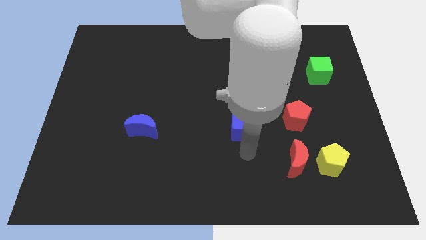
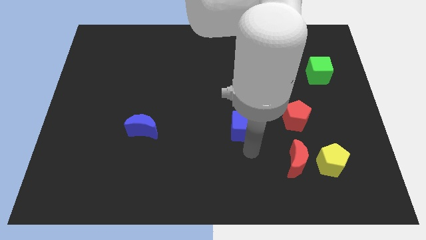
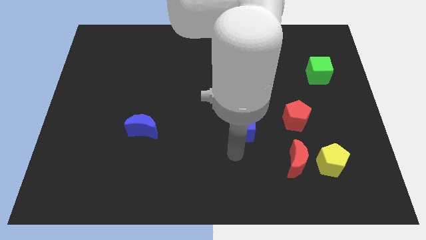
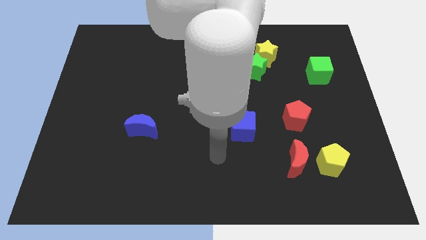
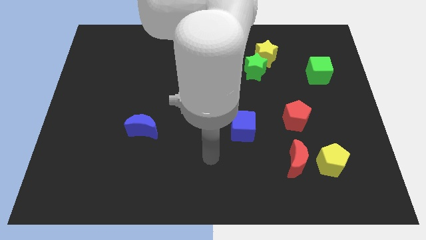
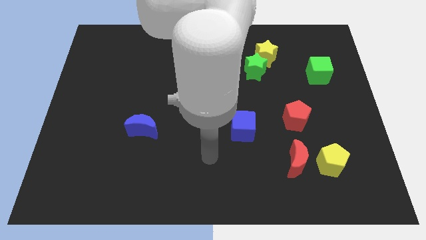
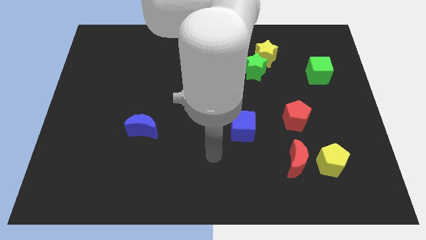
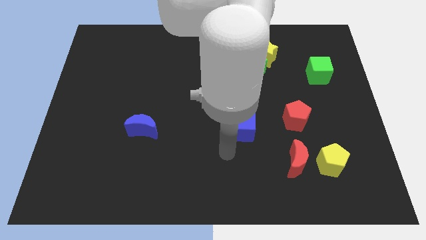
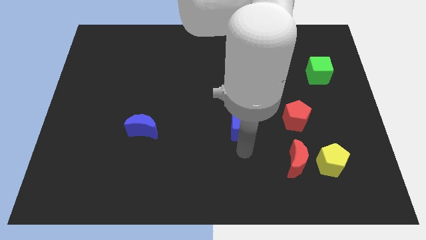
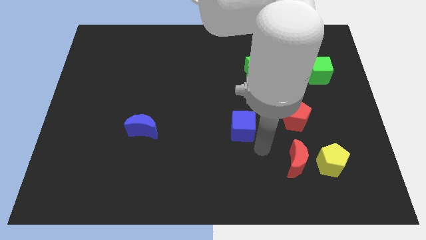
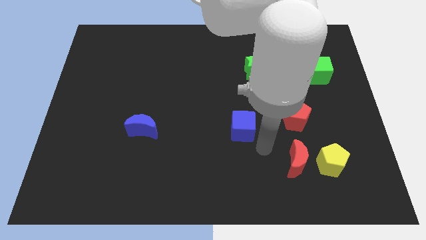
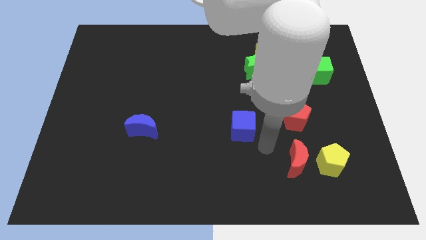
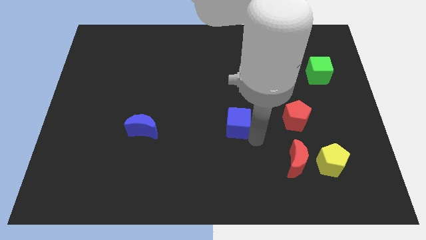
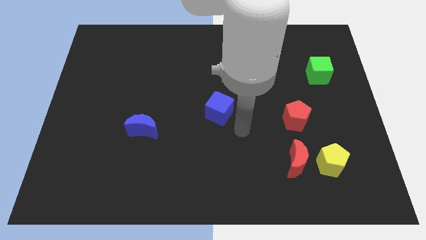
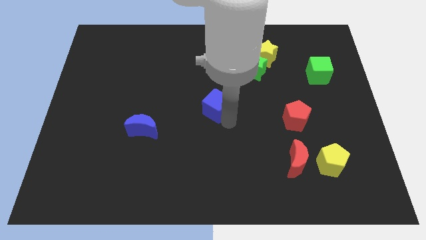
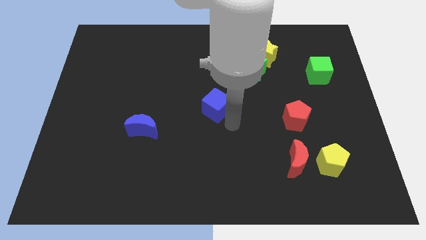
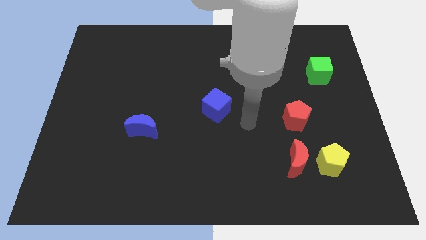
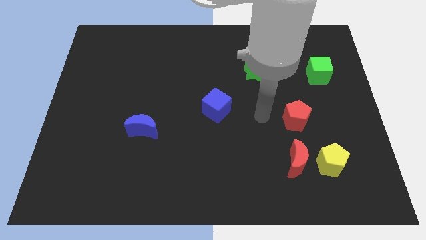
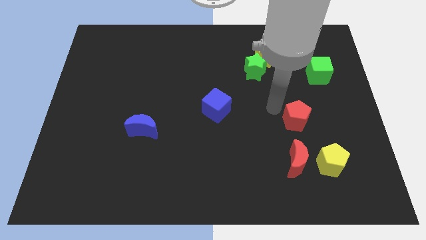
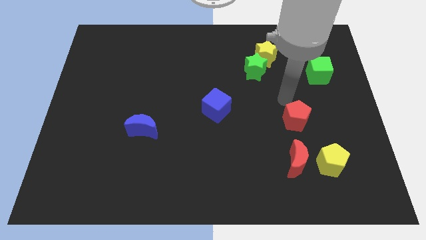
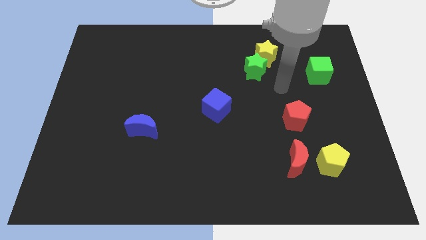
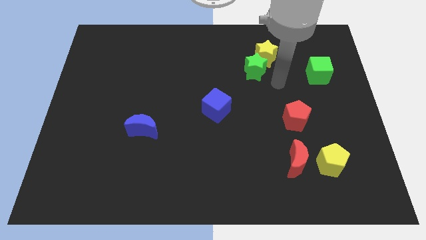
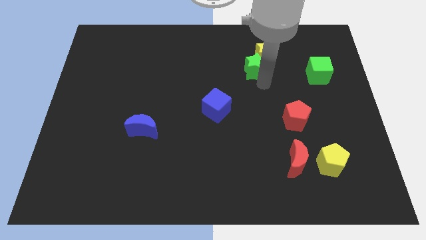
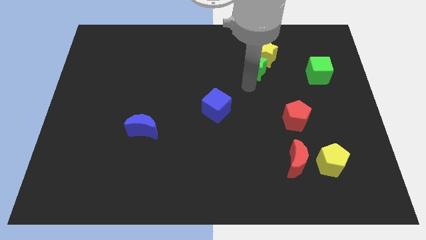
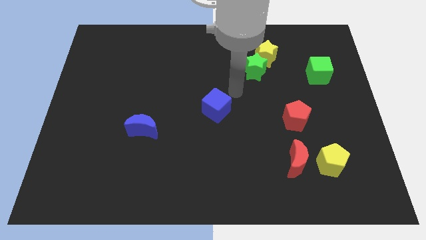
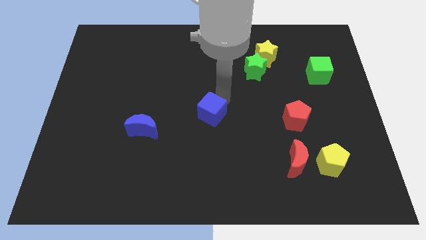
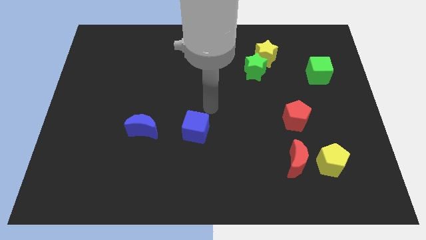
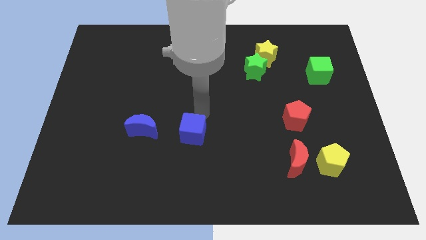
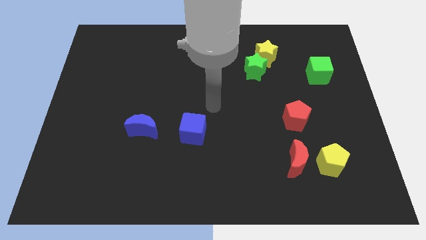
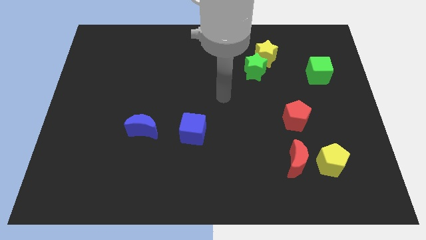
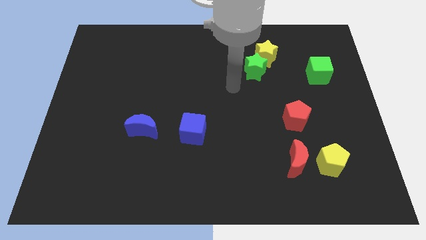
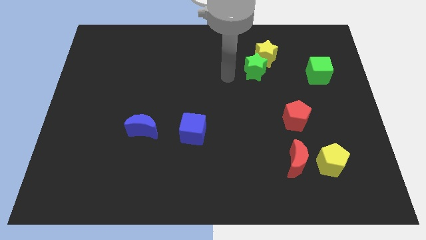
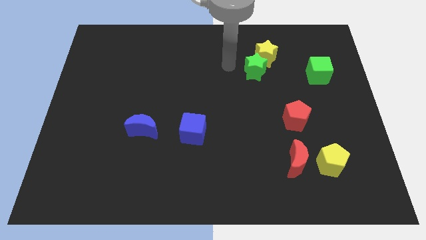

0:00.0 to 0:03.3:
move the blue cube to the center of the board

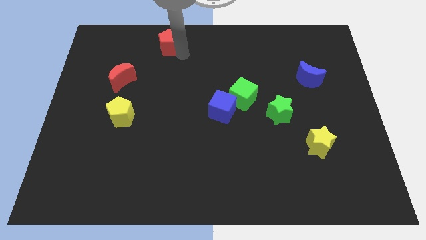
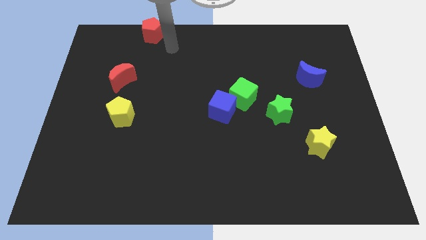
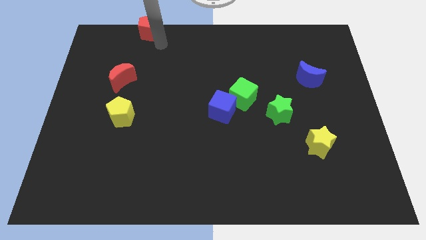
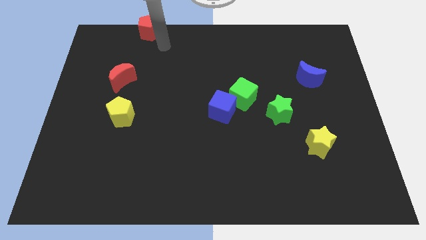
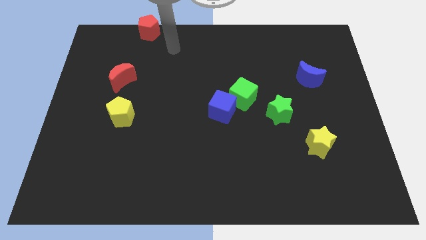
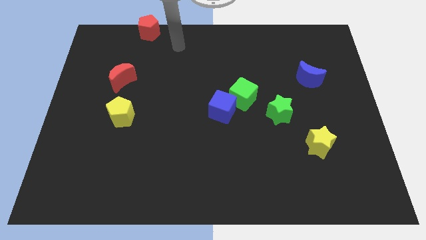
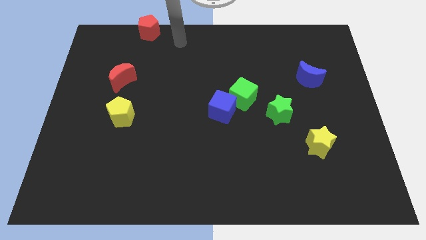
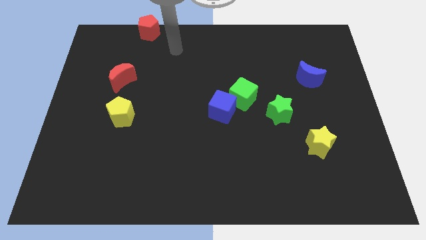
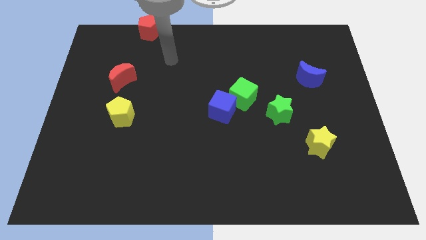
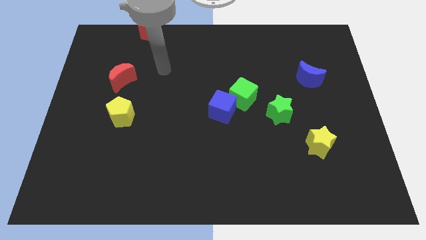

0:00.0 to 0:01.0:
move red pentagon to the left top

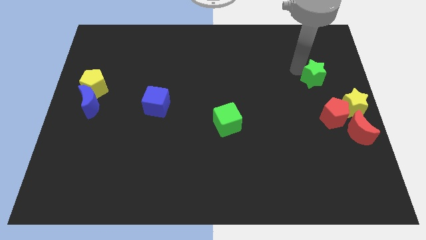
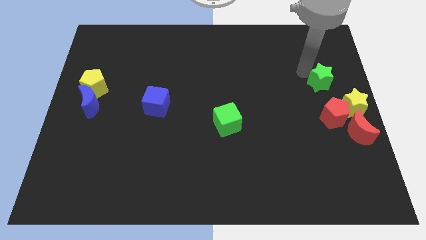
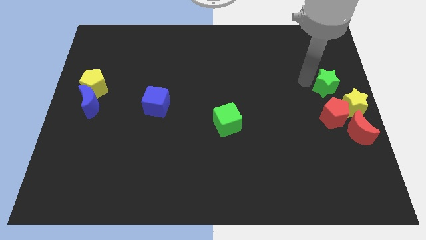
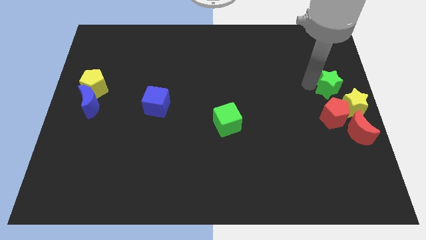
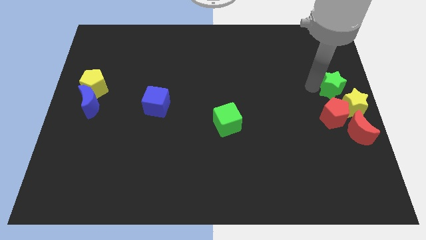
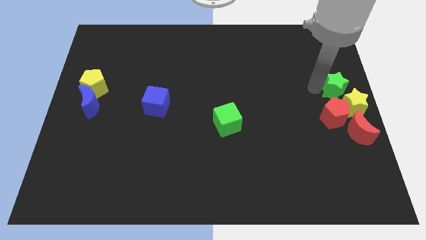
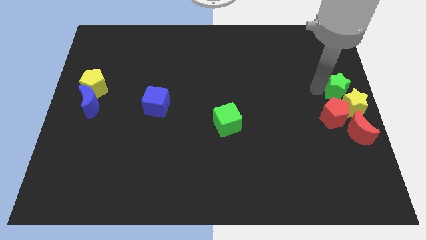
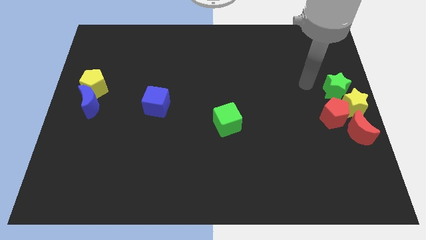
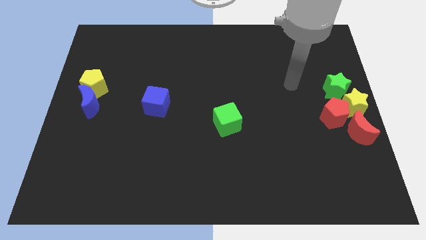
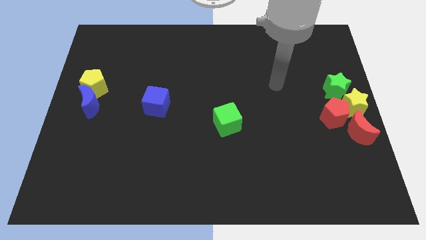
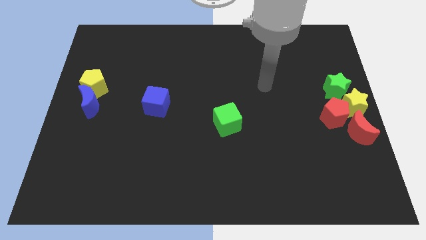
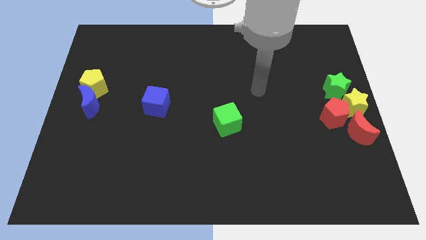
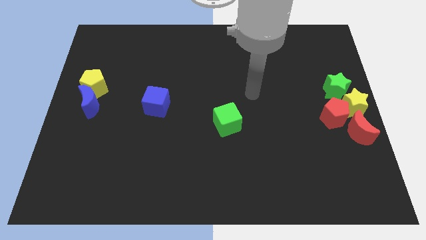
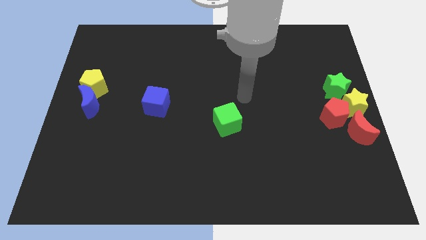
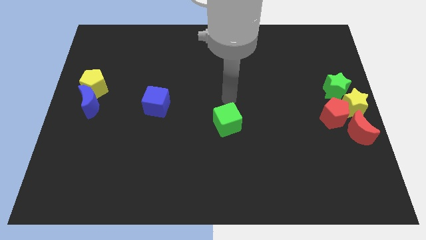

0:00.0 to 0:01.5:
move the green star close to the yellow star

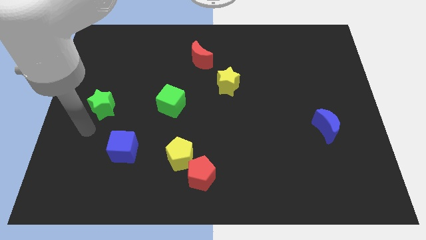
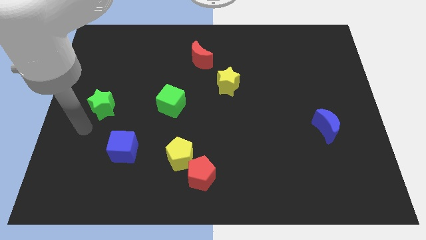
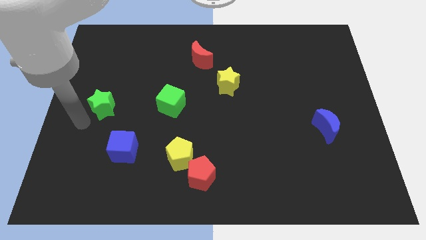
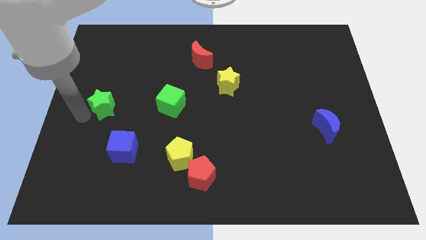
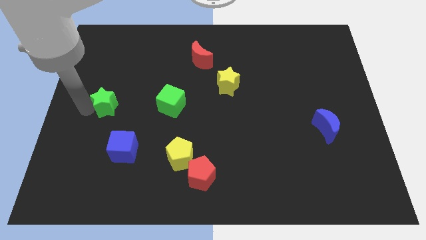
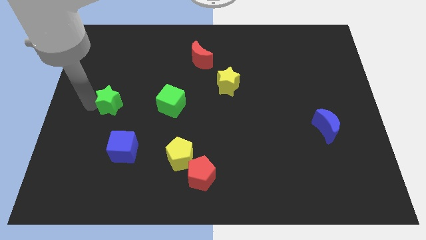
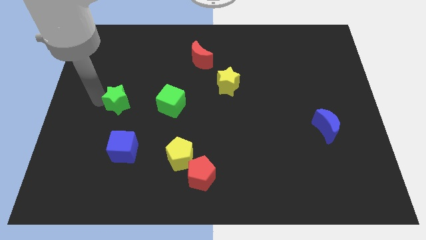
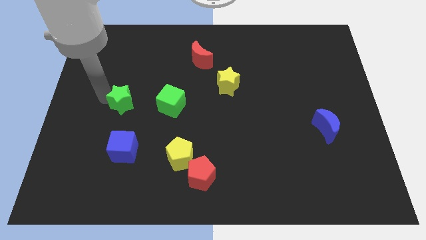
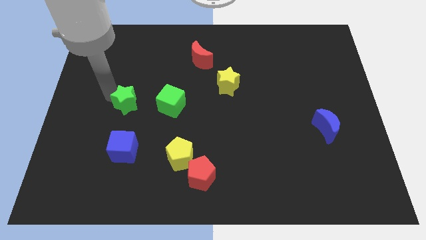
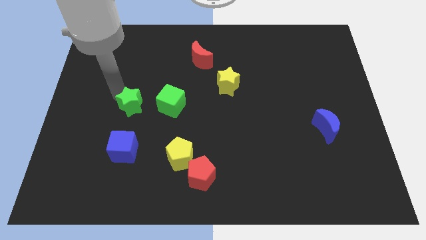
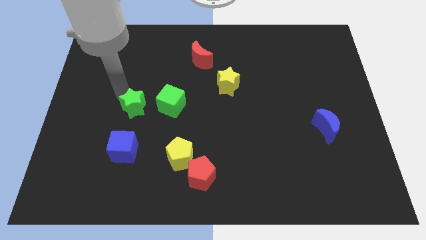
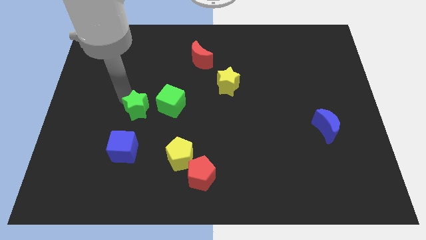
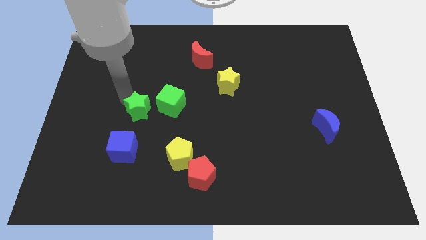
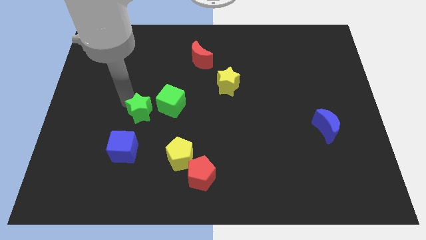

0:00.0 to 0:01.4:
move the green star towards the green cube

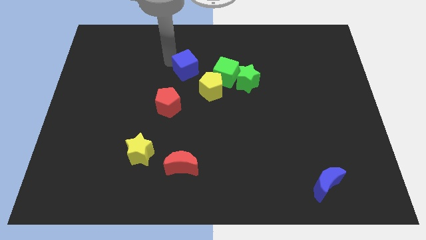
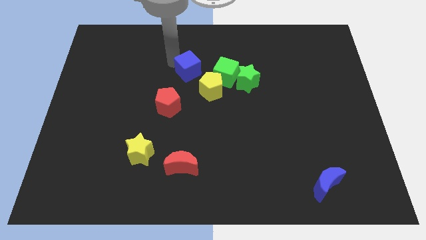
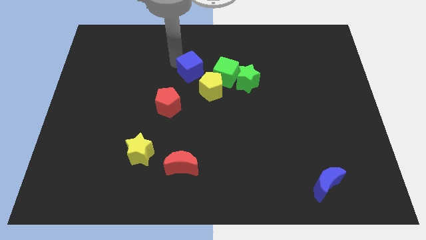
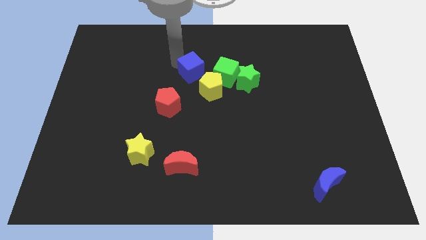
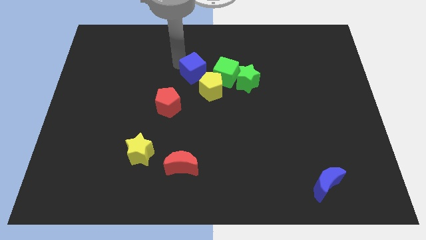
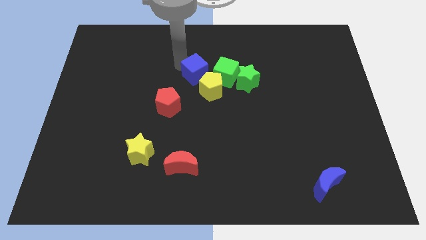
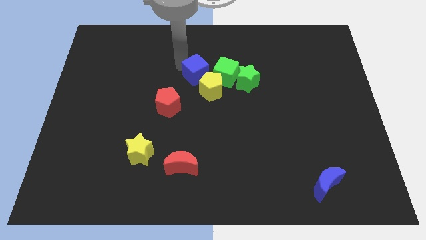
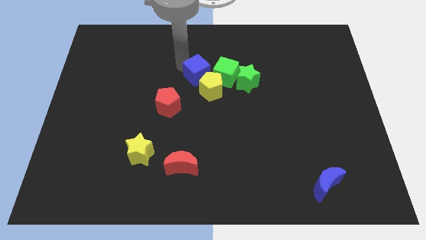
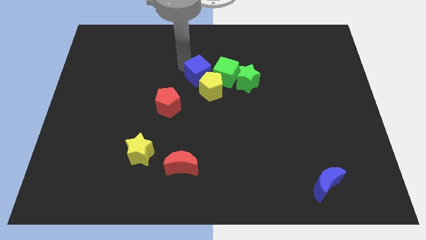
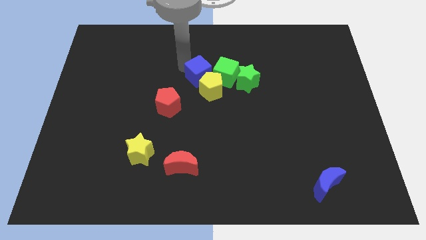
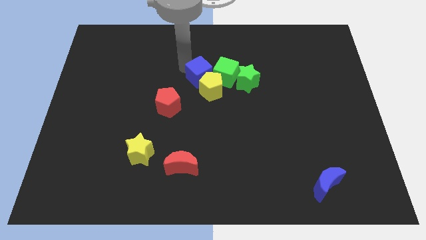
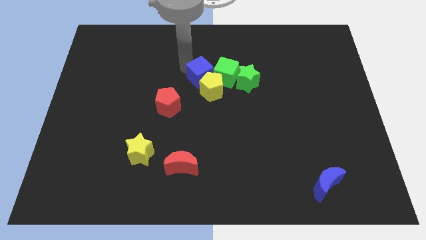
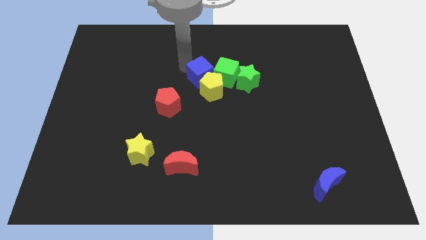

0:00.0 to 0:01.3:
move the blue cube close to the yellow pentagon and green cube

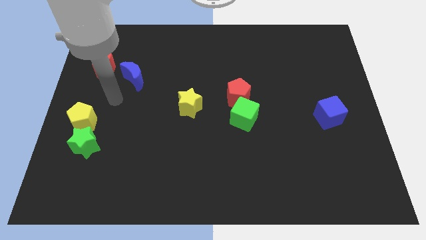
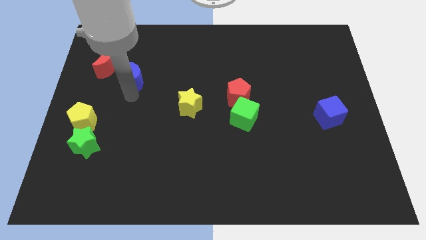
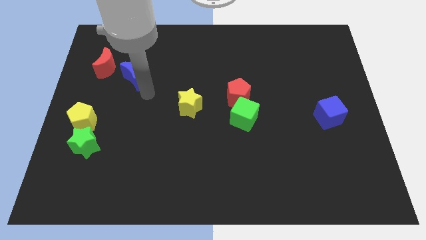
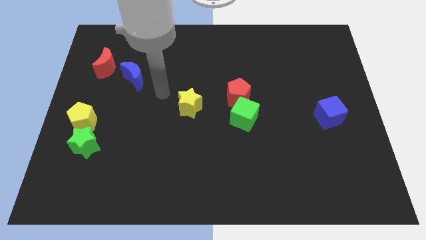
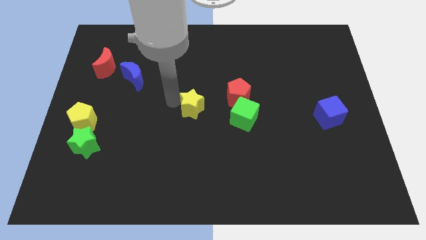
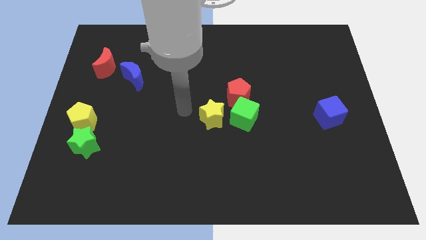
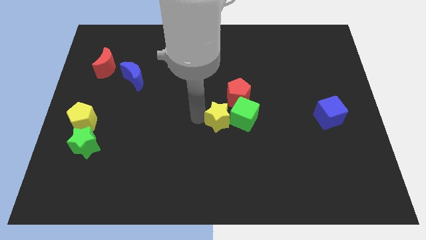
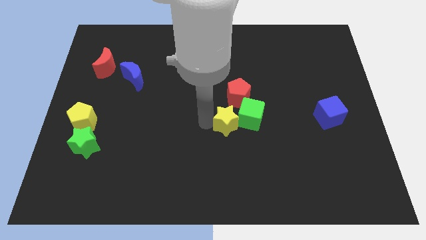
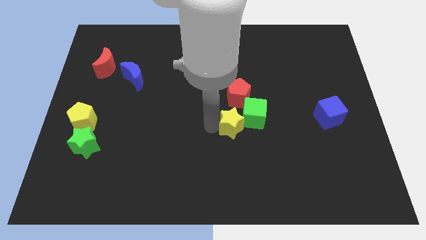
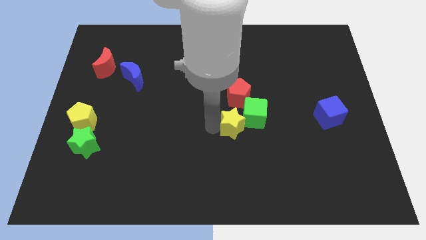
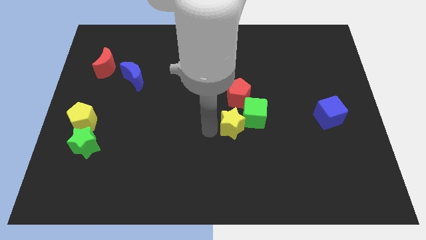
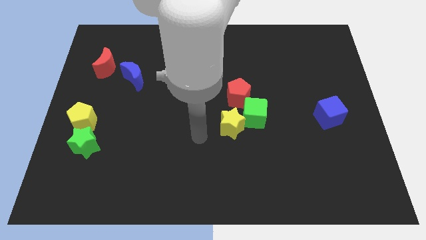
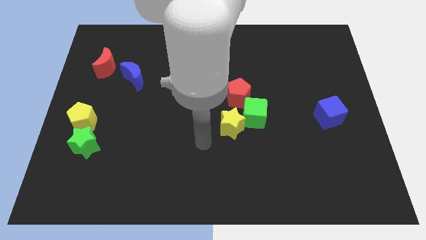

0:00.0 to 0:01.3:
push the yellow star close to the green cube
